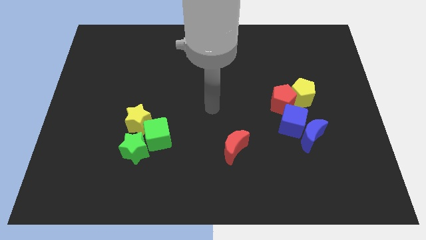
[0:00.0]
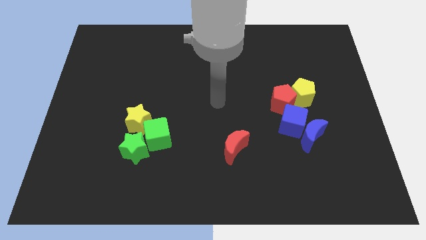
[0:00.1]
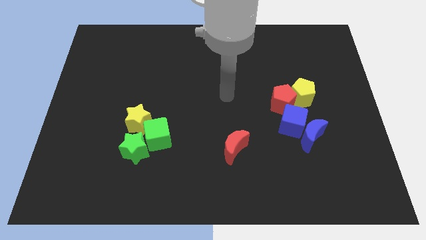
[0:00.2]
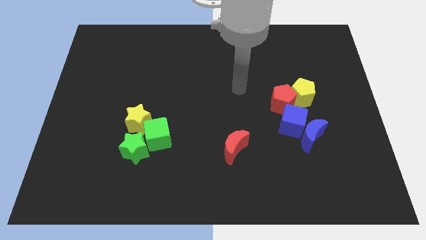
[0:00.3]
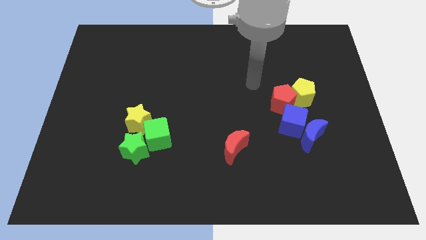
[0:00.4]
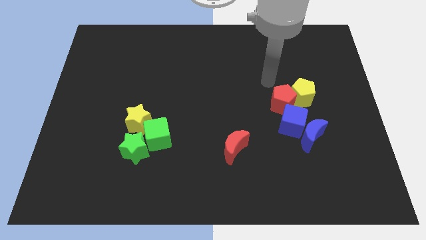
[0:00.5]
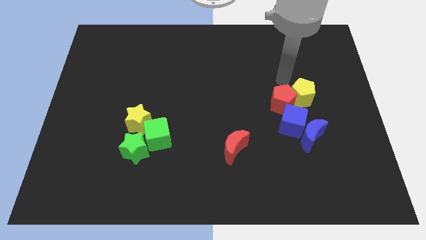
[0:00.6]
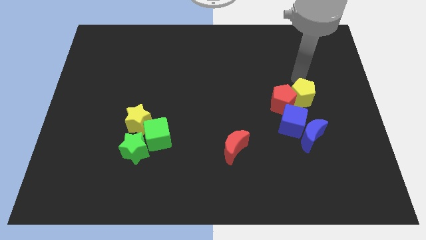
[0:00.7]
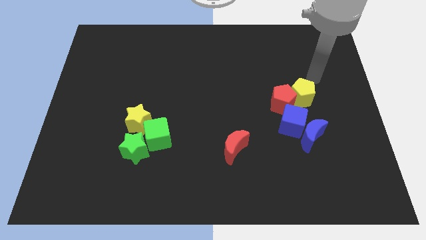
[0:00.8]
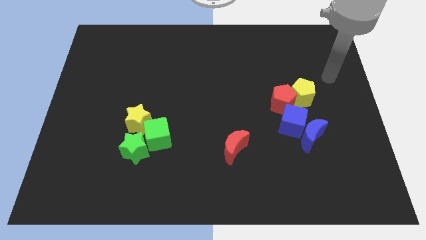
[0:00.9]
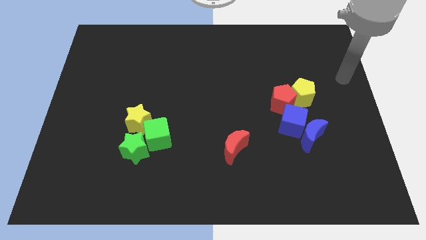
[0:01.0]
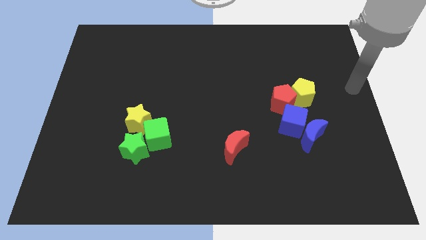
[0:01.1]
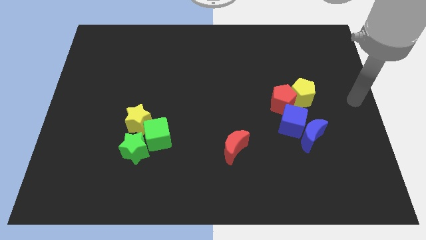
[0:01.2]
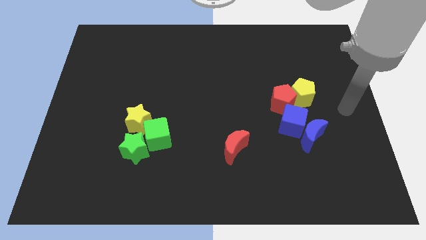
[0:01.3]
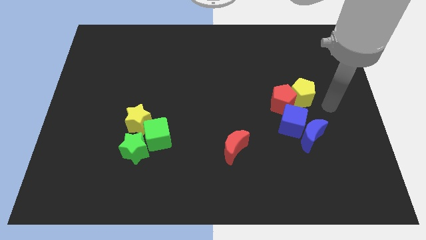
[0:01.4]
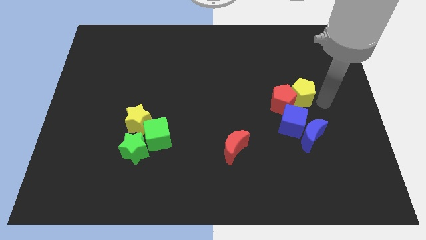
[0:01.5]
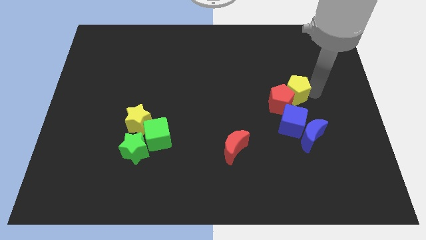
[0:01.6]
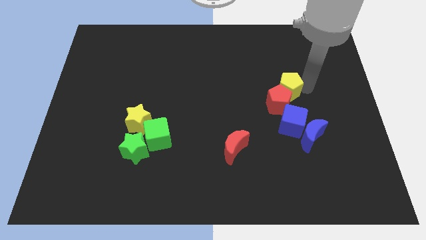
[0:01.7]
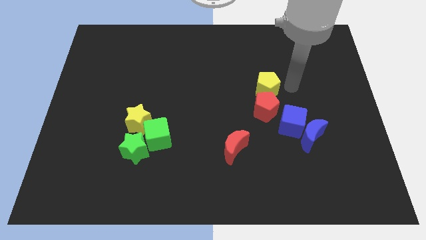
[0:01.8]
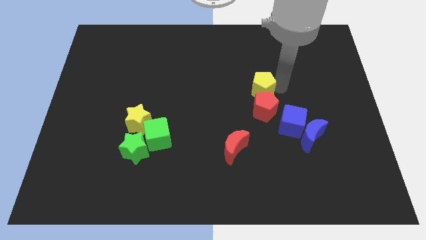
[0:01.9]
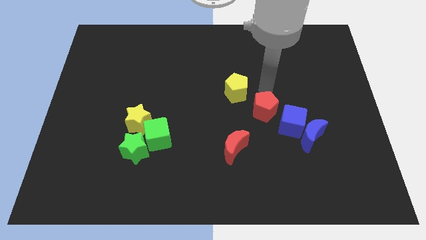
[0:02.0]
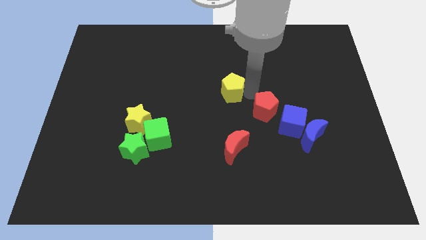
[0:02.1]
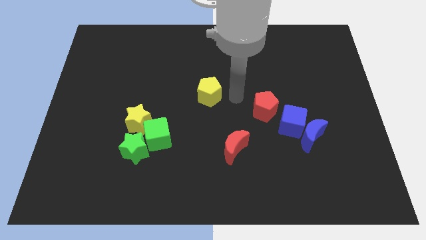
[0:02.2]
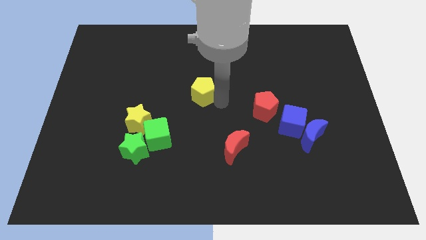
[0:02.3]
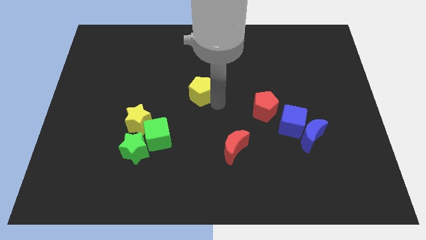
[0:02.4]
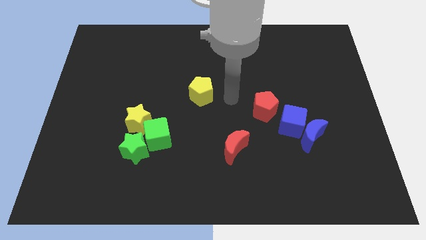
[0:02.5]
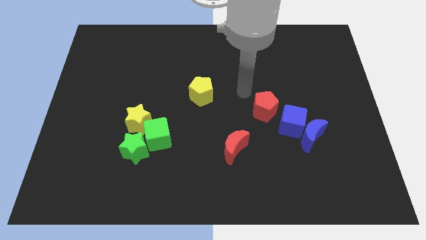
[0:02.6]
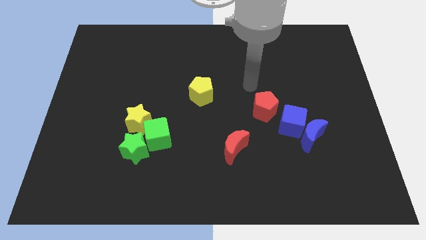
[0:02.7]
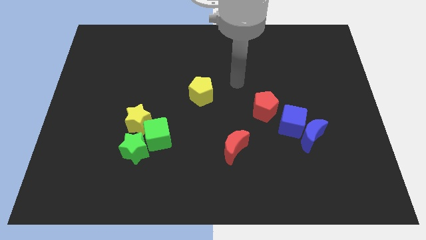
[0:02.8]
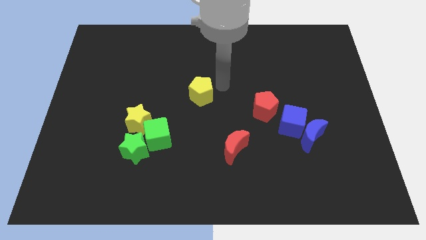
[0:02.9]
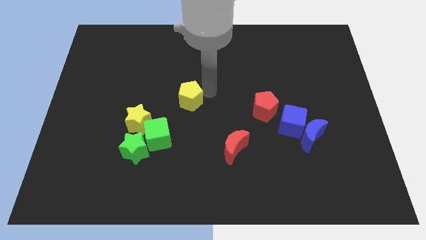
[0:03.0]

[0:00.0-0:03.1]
separate yellow pentagon from red pentagon

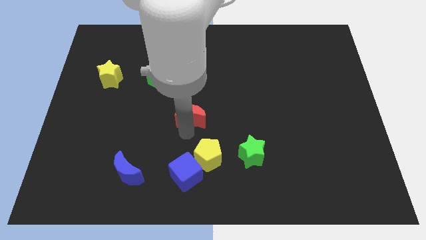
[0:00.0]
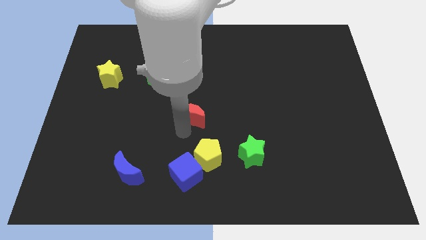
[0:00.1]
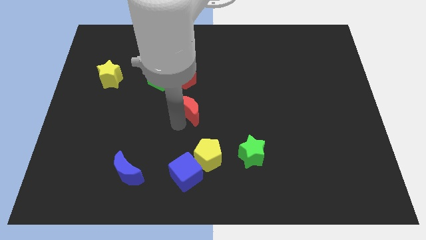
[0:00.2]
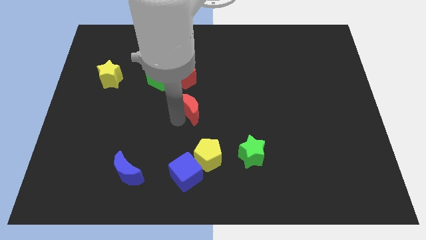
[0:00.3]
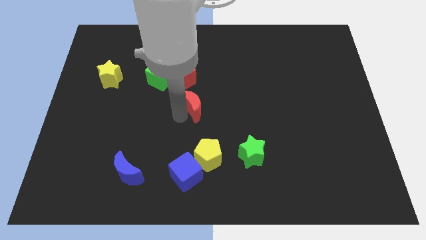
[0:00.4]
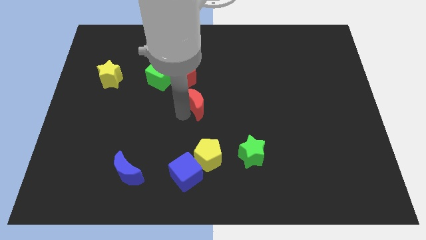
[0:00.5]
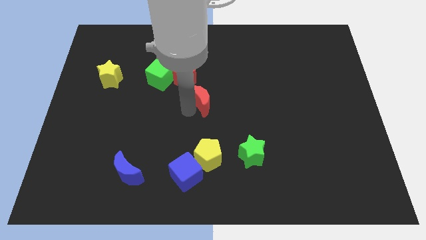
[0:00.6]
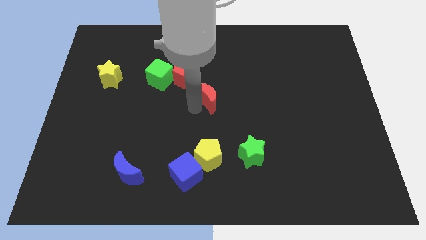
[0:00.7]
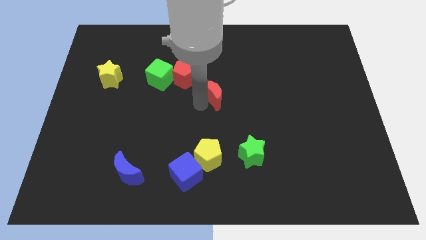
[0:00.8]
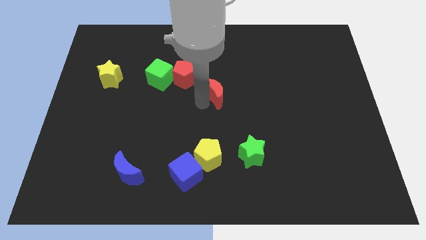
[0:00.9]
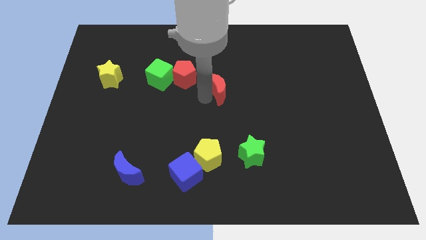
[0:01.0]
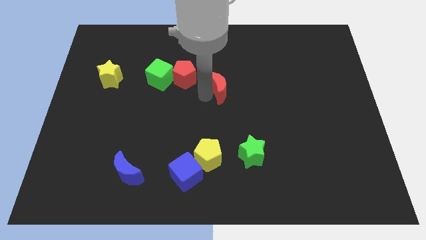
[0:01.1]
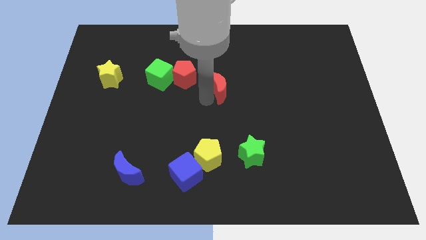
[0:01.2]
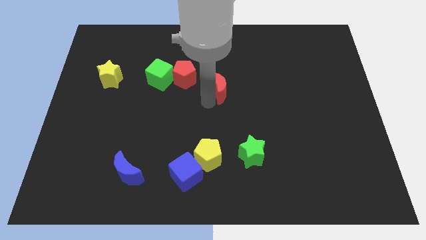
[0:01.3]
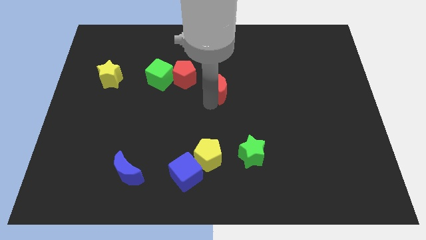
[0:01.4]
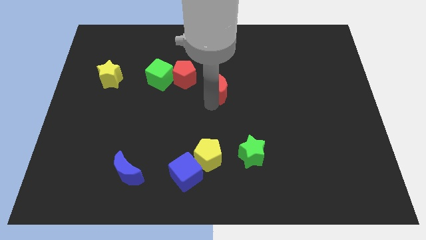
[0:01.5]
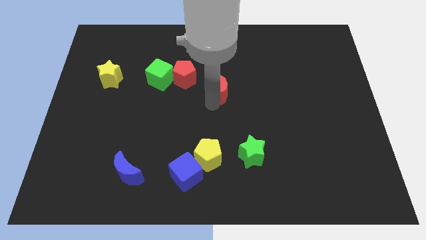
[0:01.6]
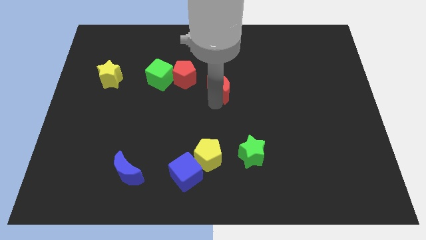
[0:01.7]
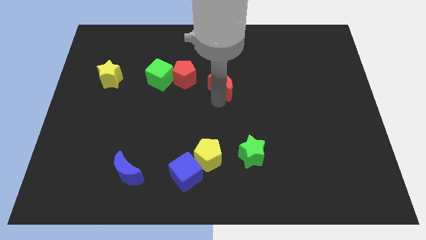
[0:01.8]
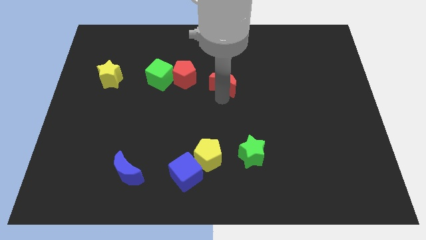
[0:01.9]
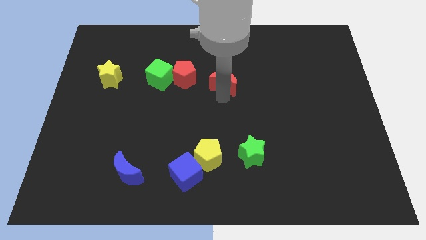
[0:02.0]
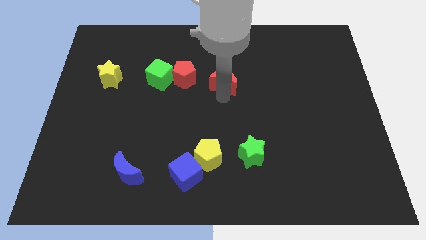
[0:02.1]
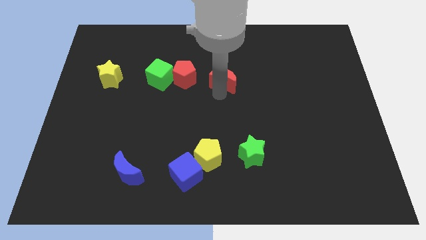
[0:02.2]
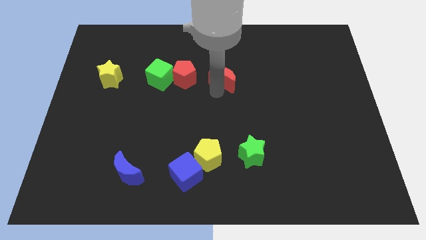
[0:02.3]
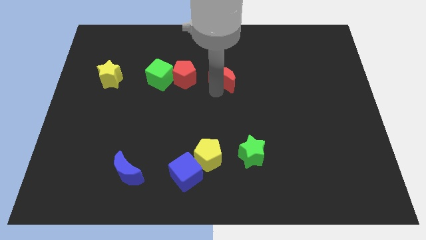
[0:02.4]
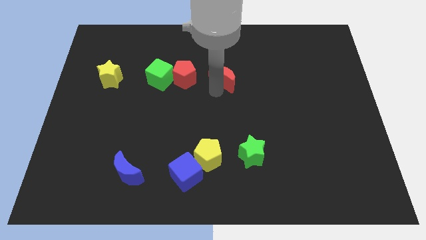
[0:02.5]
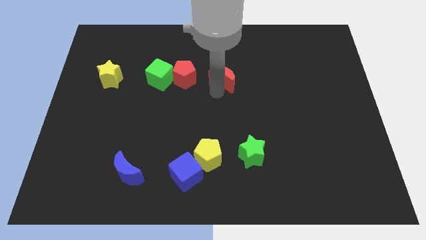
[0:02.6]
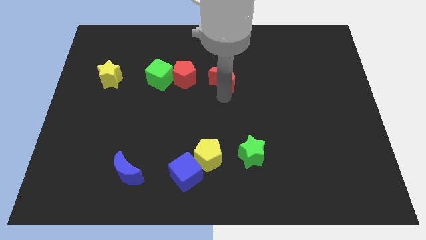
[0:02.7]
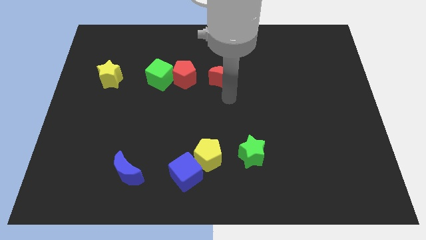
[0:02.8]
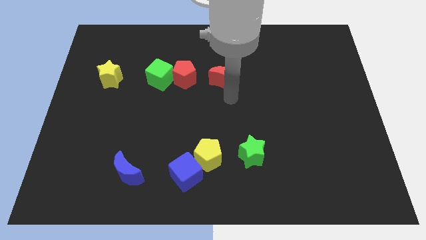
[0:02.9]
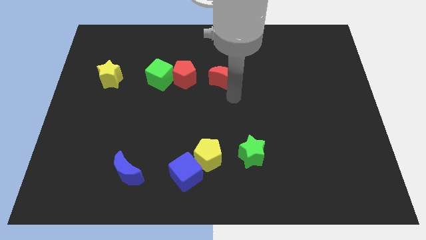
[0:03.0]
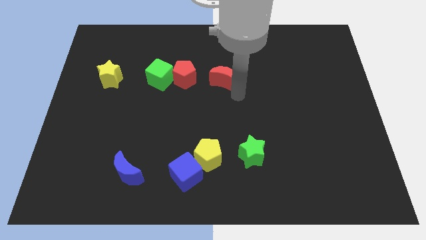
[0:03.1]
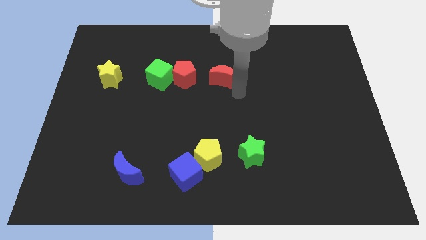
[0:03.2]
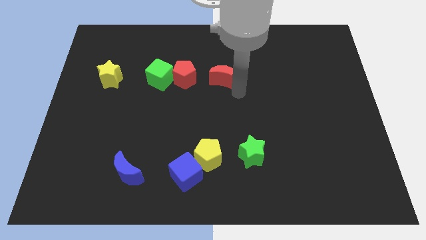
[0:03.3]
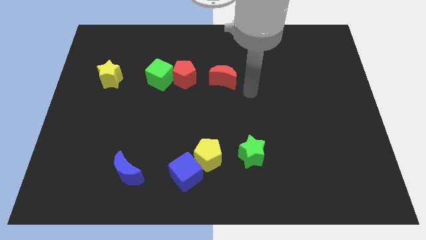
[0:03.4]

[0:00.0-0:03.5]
place the red moon right to the red pentagon

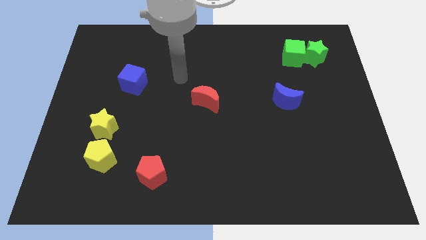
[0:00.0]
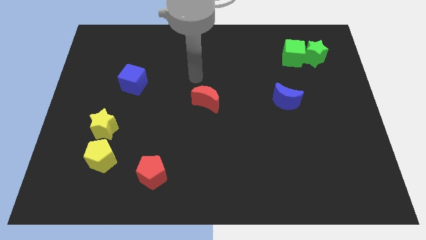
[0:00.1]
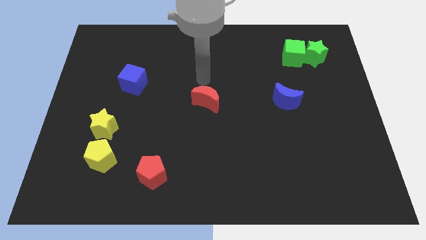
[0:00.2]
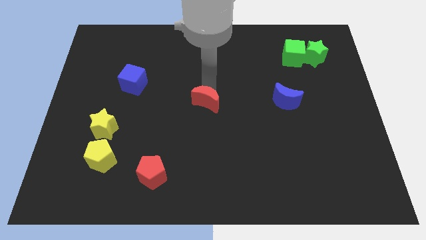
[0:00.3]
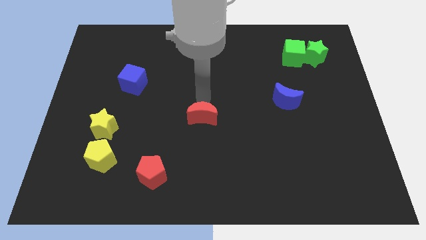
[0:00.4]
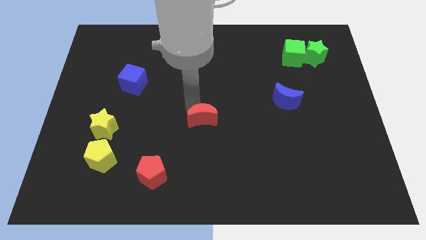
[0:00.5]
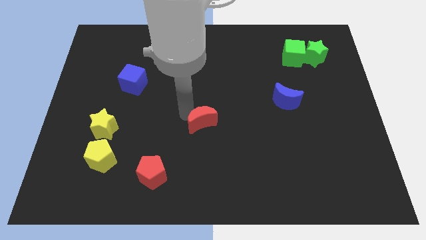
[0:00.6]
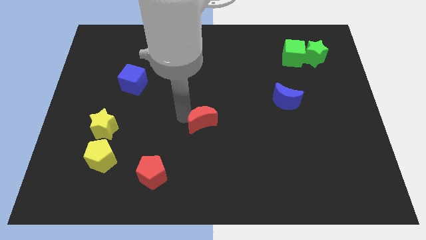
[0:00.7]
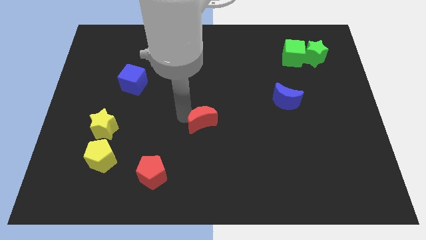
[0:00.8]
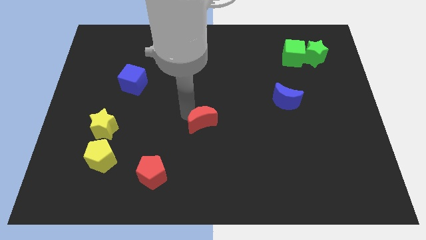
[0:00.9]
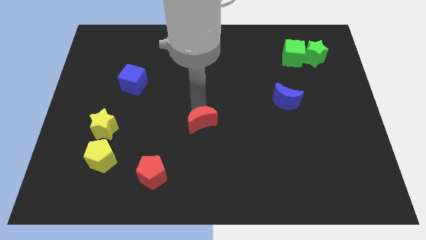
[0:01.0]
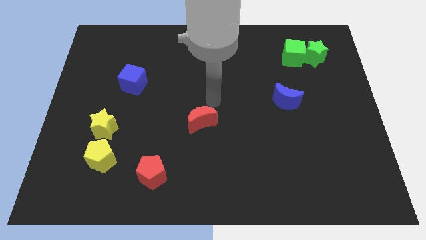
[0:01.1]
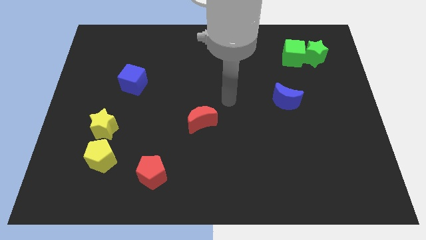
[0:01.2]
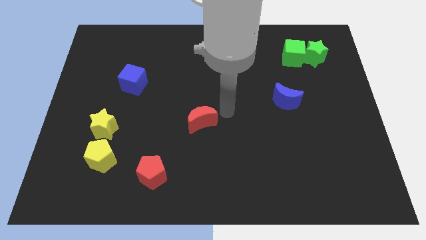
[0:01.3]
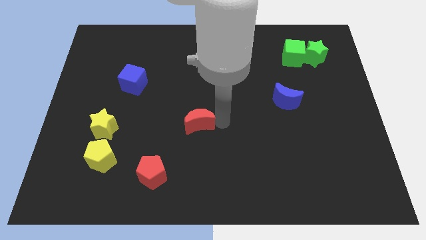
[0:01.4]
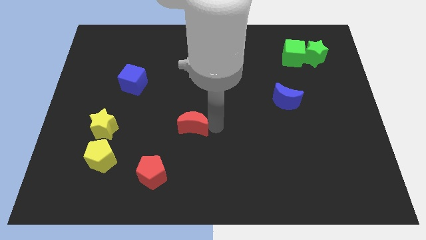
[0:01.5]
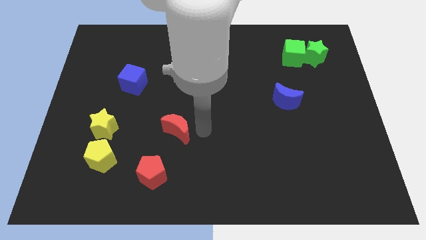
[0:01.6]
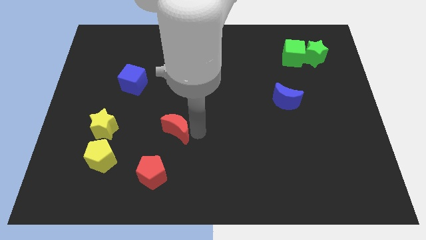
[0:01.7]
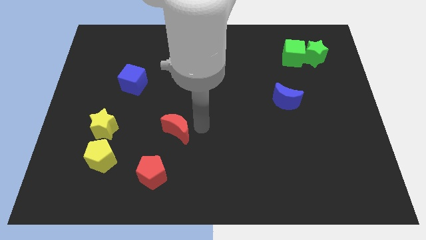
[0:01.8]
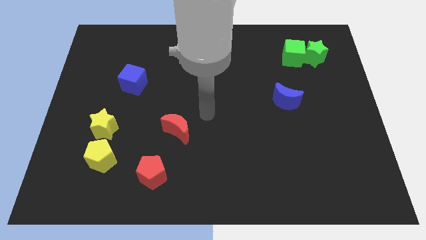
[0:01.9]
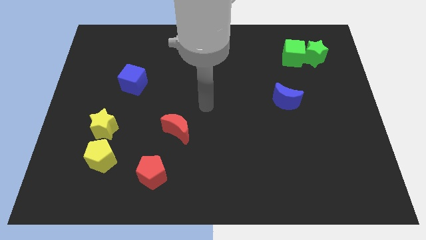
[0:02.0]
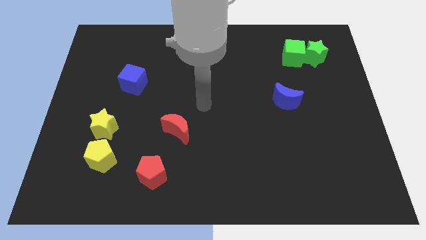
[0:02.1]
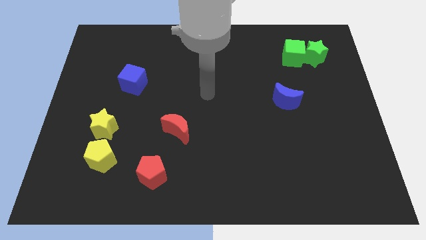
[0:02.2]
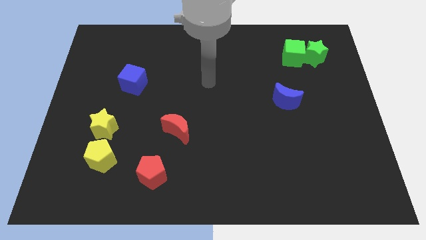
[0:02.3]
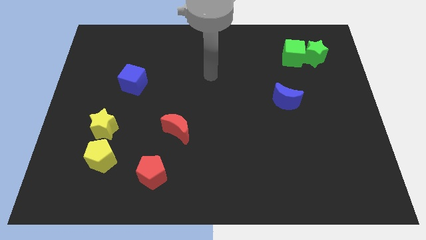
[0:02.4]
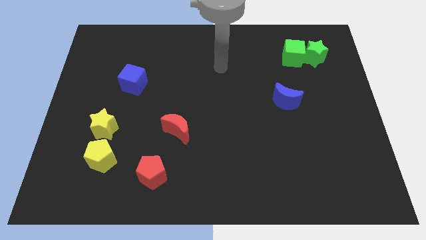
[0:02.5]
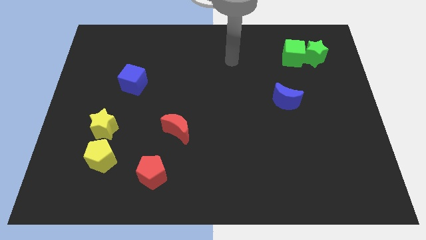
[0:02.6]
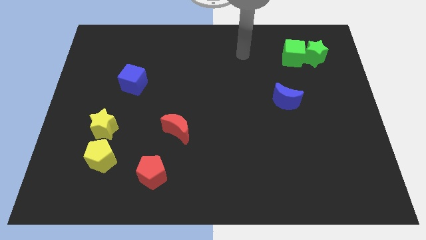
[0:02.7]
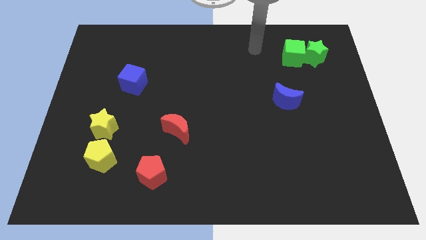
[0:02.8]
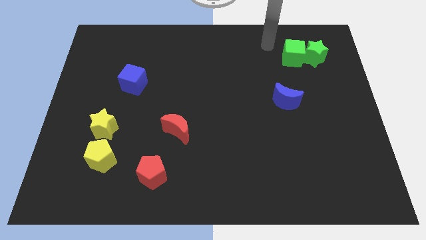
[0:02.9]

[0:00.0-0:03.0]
push the red crescent above the red pentagon
